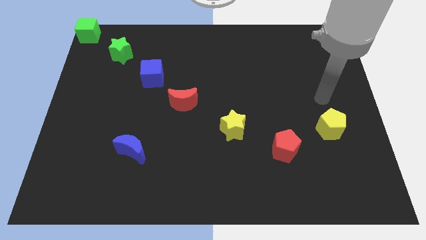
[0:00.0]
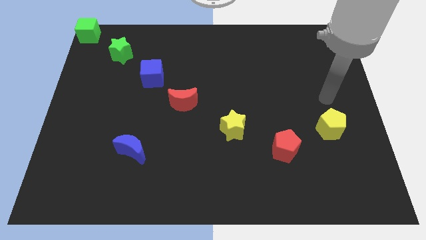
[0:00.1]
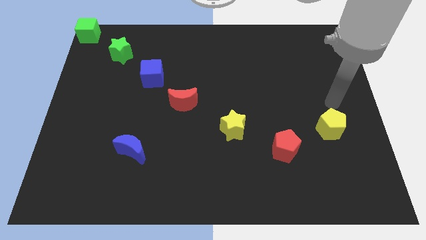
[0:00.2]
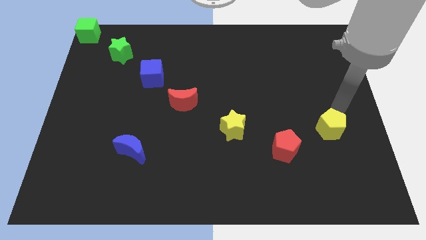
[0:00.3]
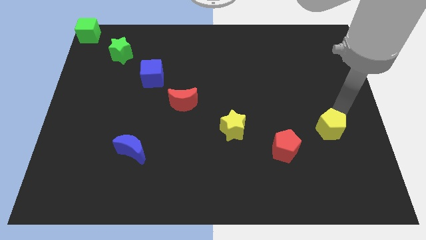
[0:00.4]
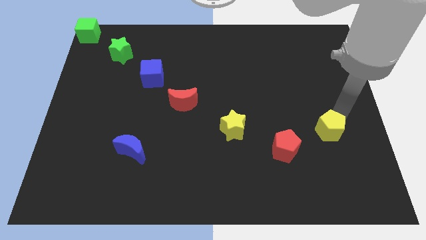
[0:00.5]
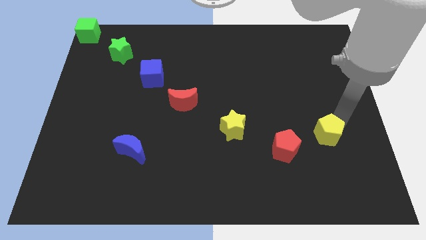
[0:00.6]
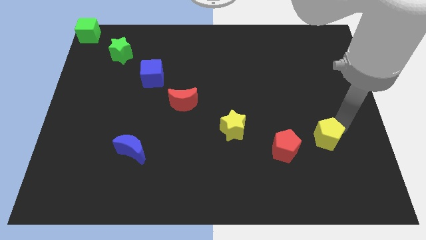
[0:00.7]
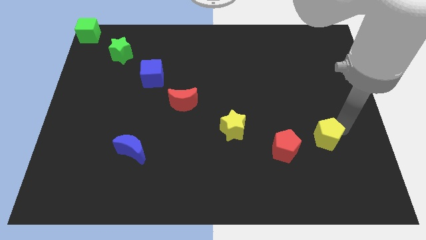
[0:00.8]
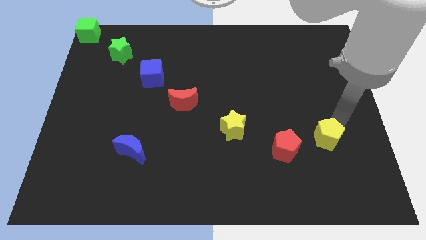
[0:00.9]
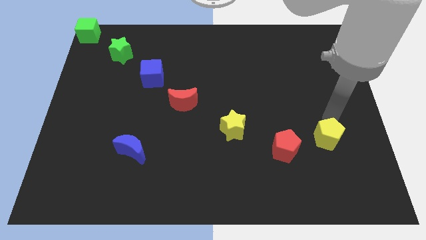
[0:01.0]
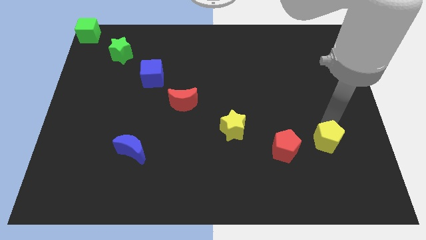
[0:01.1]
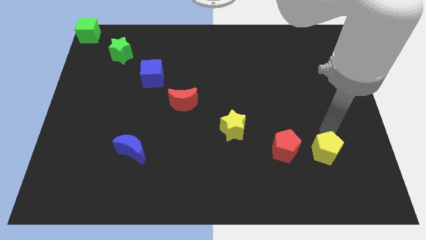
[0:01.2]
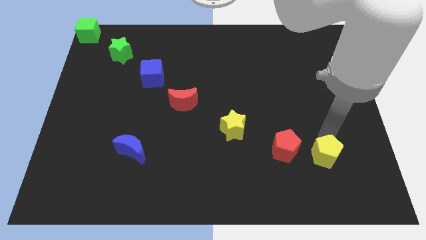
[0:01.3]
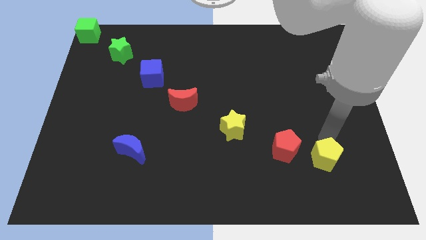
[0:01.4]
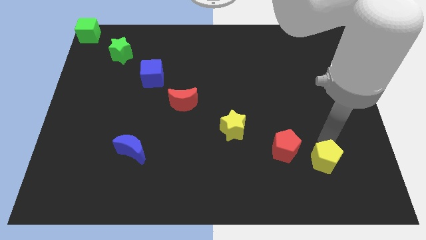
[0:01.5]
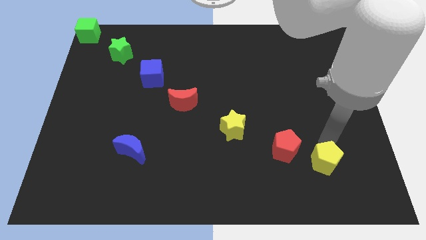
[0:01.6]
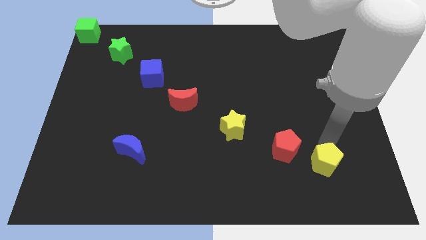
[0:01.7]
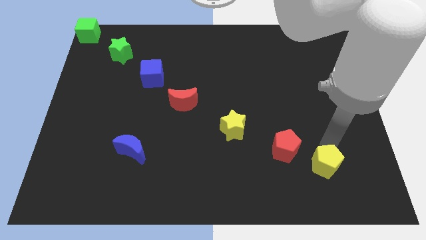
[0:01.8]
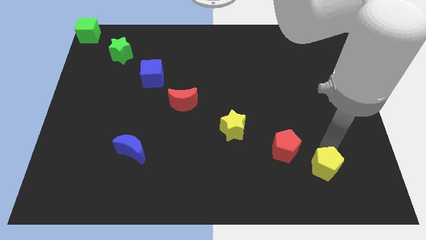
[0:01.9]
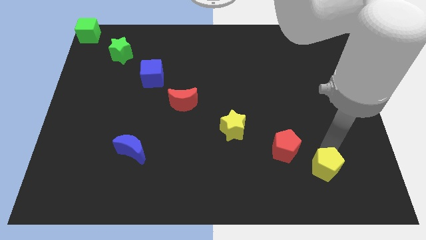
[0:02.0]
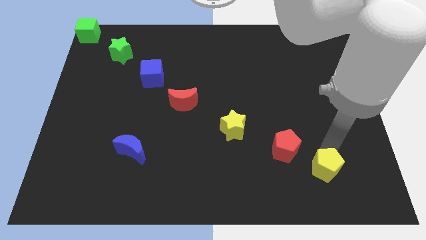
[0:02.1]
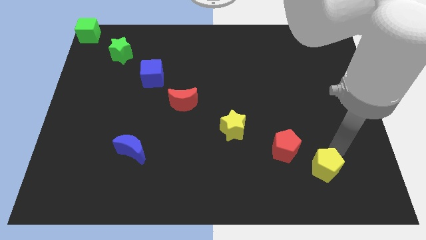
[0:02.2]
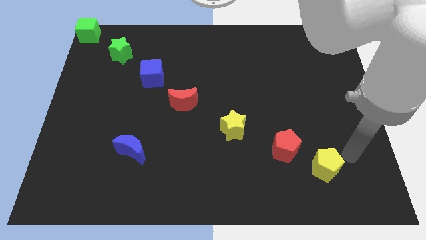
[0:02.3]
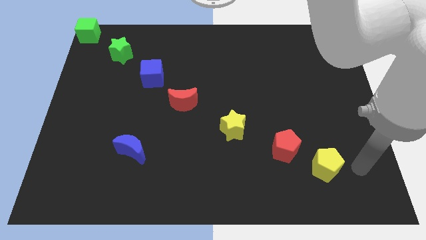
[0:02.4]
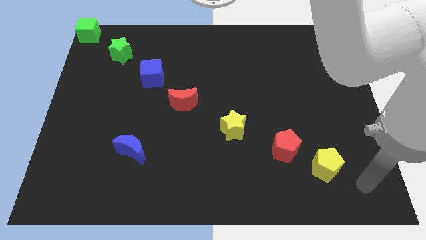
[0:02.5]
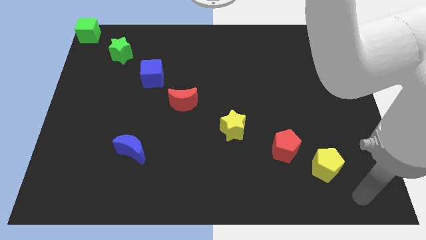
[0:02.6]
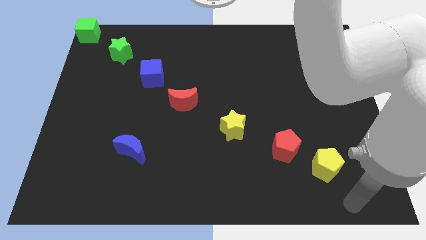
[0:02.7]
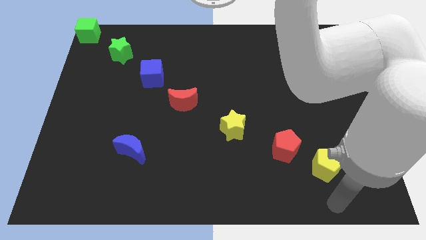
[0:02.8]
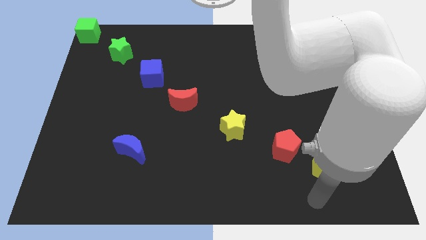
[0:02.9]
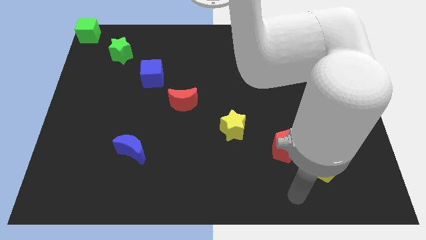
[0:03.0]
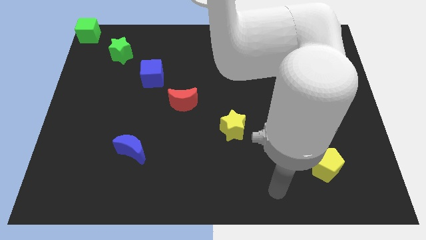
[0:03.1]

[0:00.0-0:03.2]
push the yellow pentagon diagonal right bottom of red pentagon

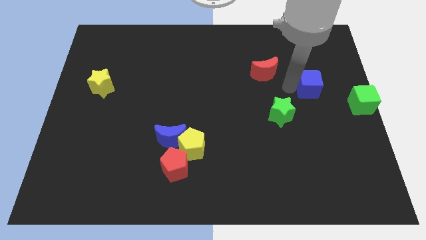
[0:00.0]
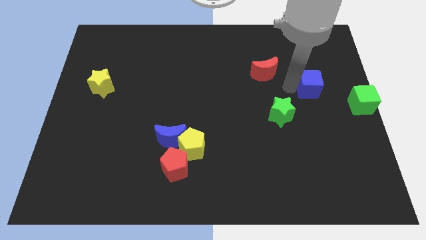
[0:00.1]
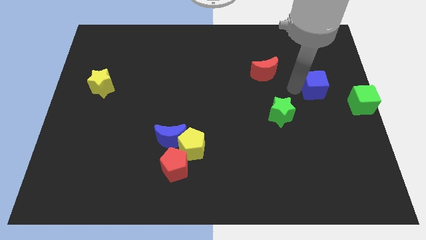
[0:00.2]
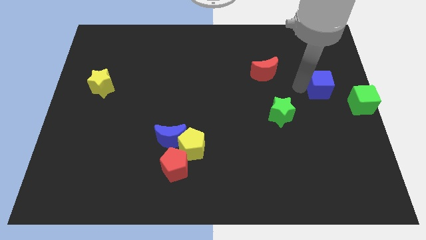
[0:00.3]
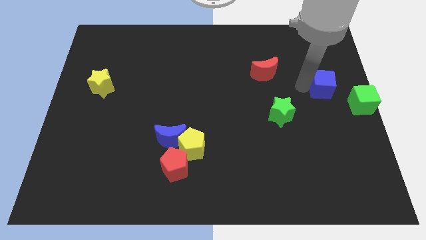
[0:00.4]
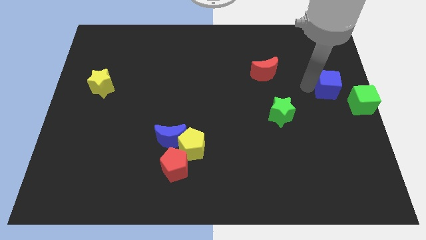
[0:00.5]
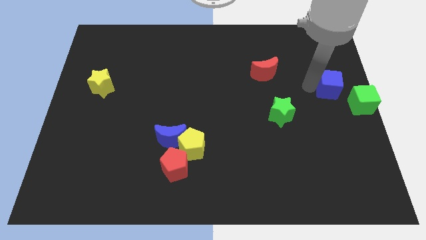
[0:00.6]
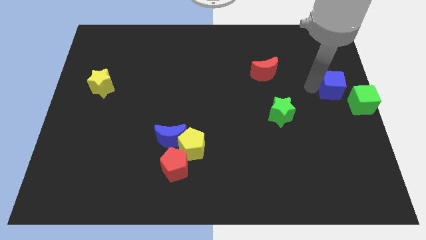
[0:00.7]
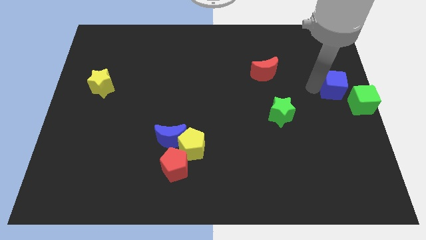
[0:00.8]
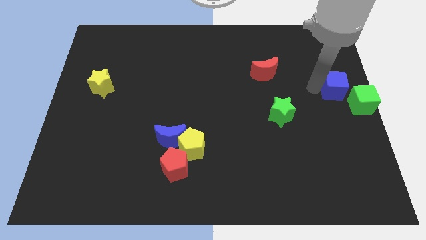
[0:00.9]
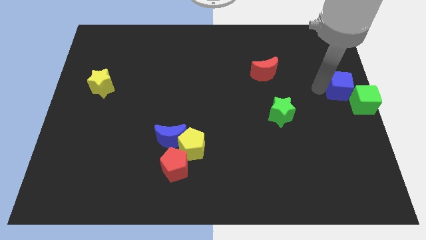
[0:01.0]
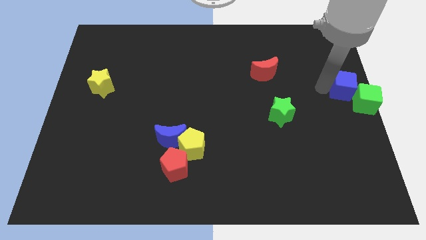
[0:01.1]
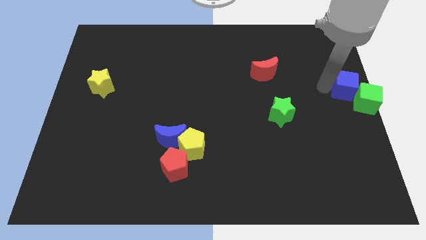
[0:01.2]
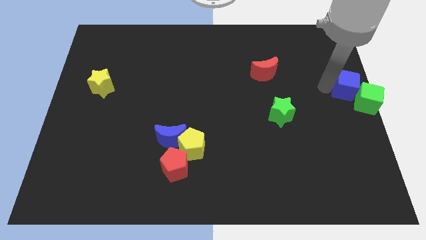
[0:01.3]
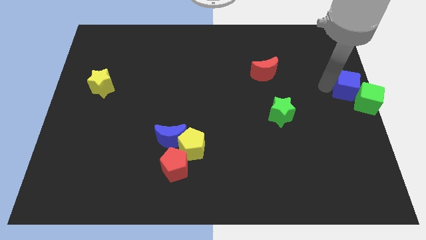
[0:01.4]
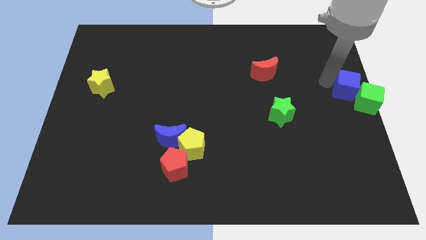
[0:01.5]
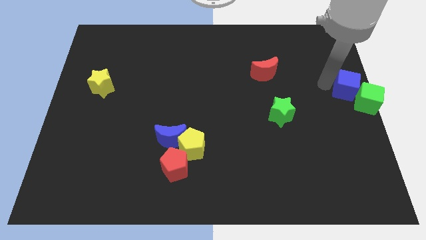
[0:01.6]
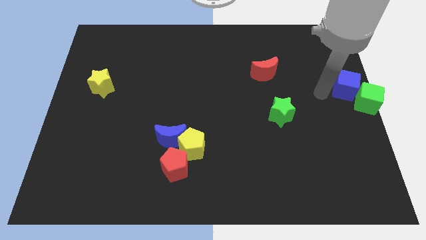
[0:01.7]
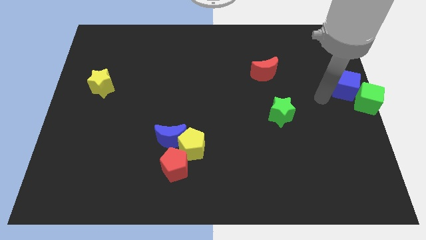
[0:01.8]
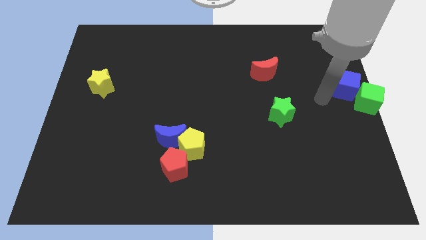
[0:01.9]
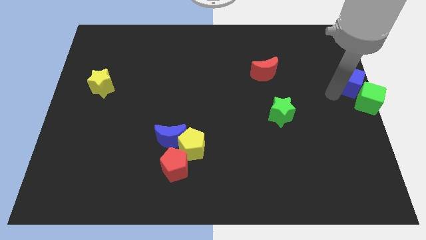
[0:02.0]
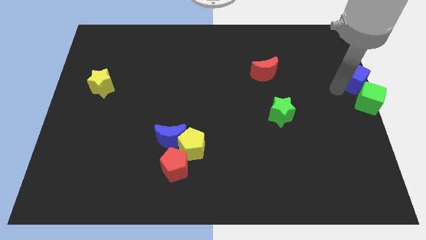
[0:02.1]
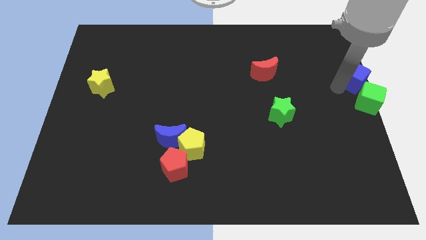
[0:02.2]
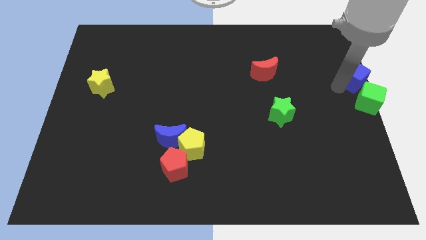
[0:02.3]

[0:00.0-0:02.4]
push the blue cube into the top of the green cube

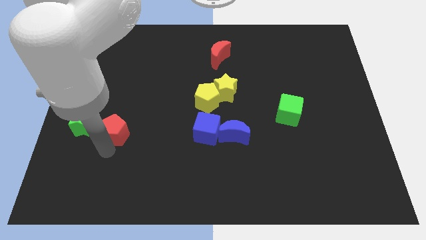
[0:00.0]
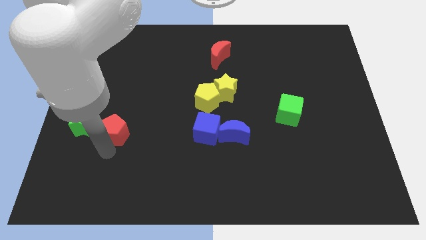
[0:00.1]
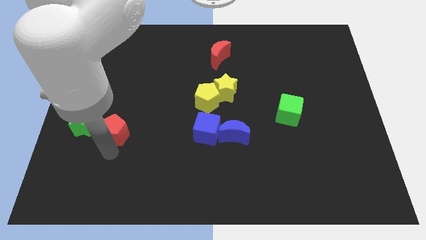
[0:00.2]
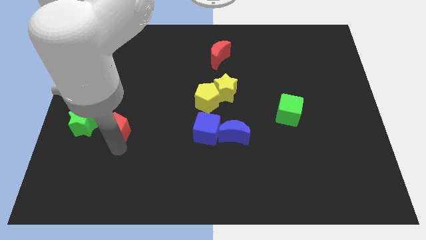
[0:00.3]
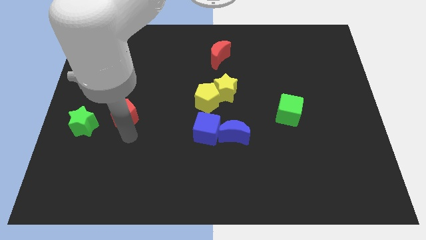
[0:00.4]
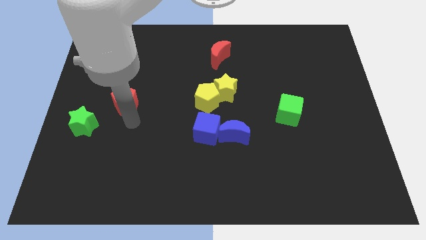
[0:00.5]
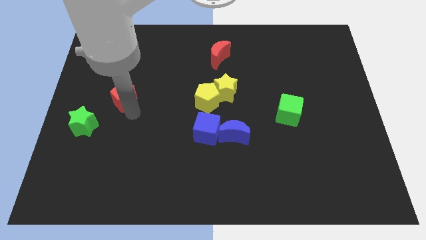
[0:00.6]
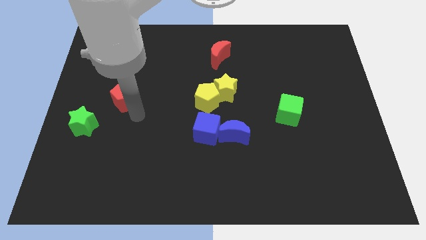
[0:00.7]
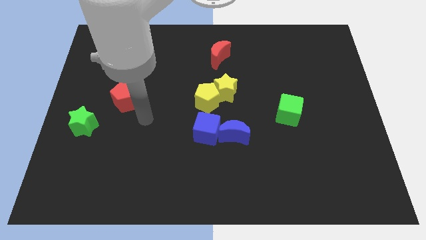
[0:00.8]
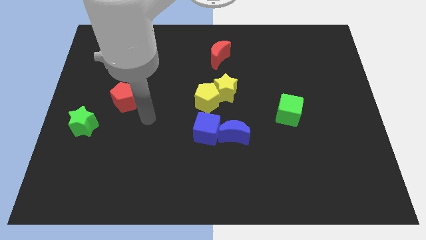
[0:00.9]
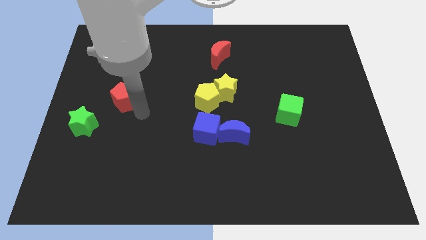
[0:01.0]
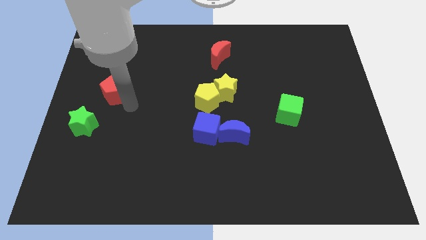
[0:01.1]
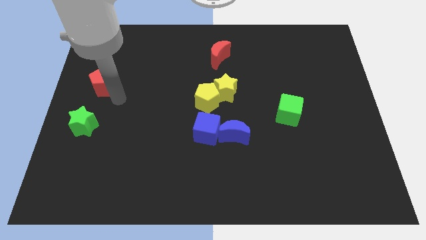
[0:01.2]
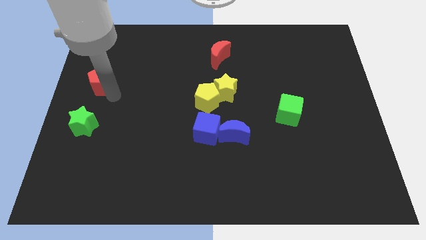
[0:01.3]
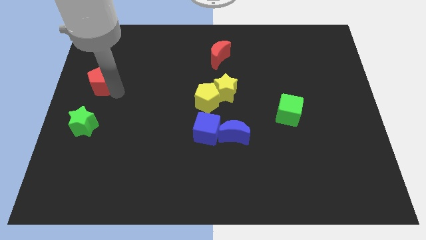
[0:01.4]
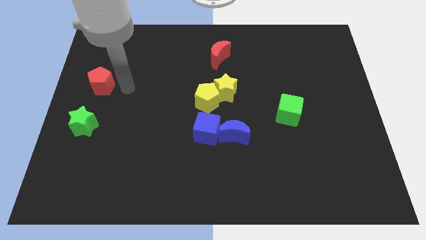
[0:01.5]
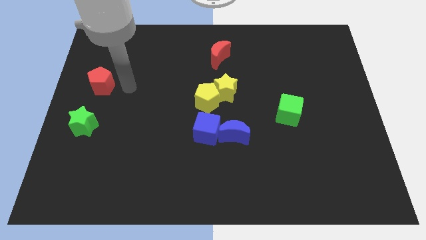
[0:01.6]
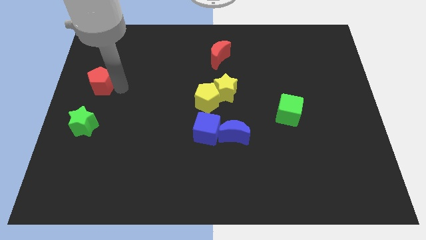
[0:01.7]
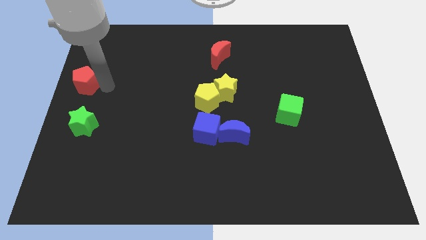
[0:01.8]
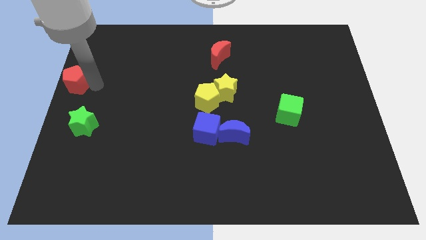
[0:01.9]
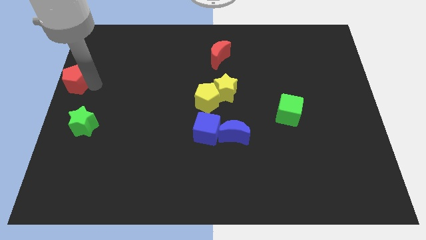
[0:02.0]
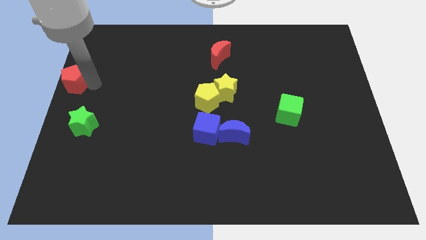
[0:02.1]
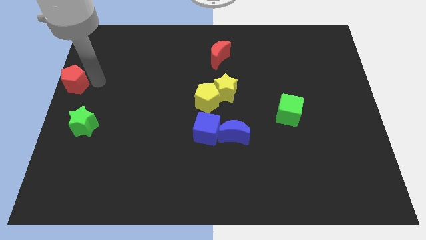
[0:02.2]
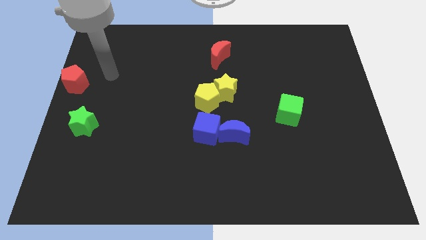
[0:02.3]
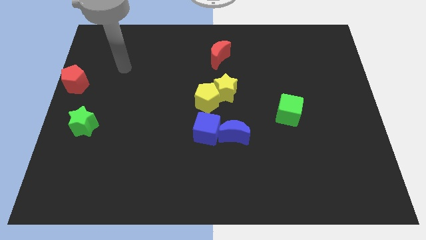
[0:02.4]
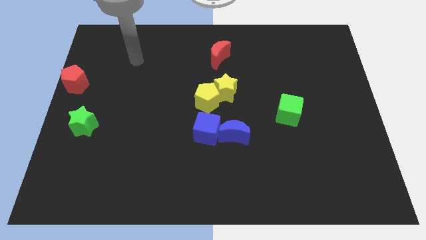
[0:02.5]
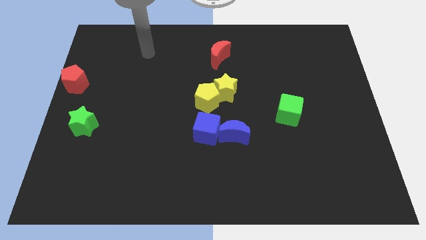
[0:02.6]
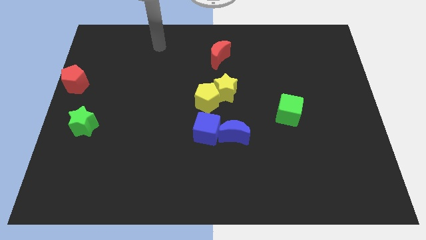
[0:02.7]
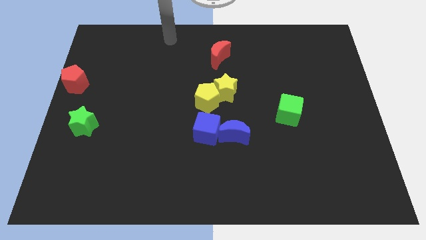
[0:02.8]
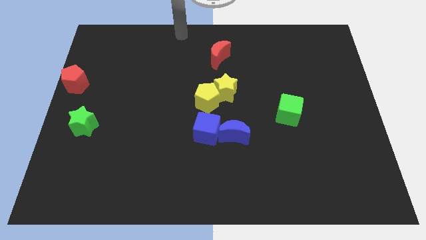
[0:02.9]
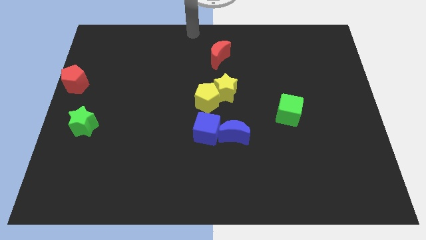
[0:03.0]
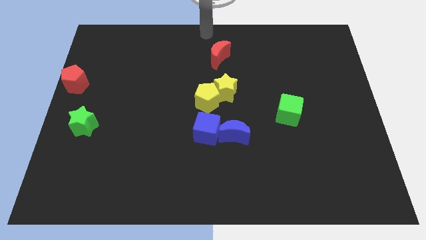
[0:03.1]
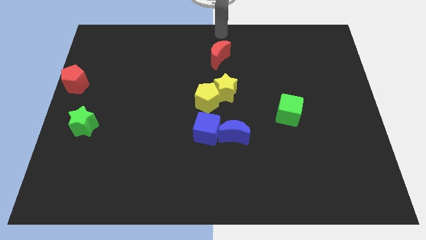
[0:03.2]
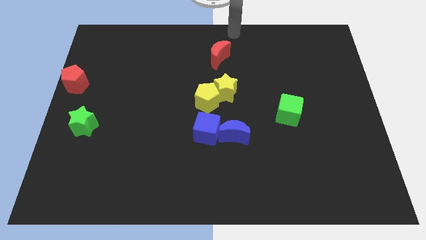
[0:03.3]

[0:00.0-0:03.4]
push the red pentagon to the center left of the board
